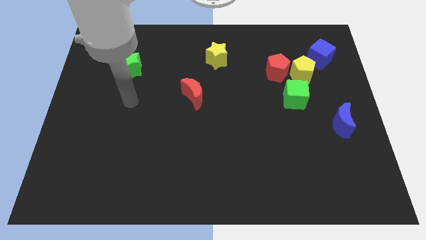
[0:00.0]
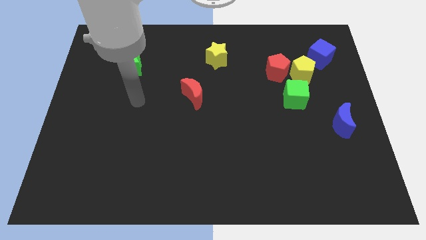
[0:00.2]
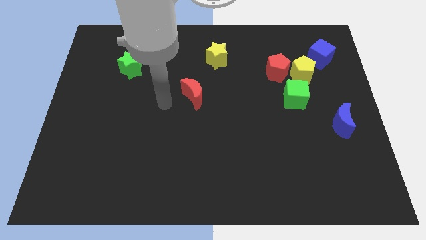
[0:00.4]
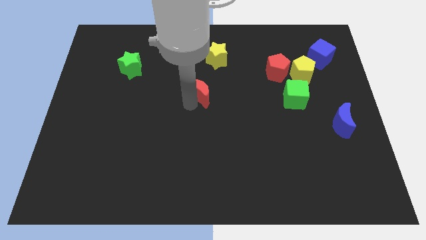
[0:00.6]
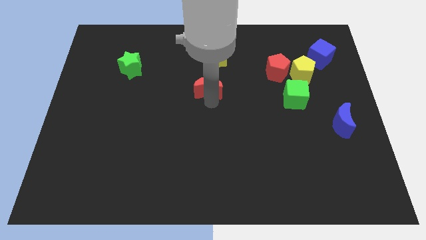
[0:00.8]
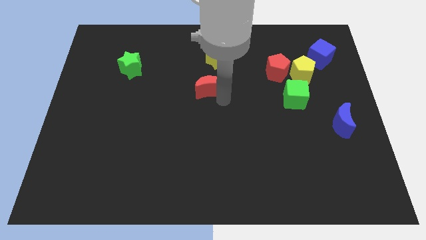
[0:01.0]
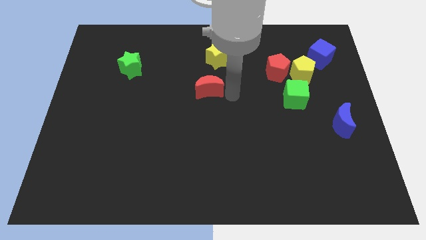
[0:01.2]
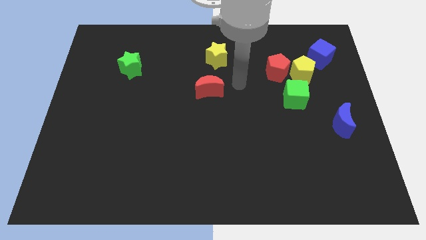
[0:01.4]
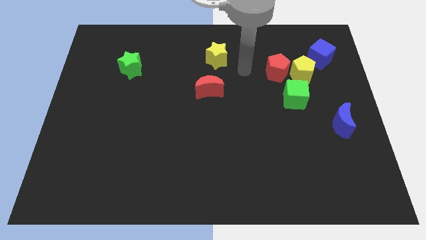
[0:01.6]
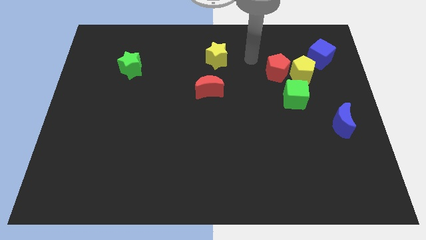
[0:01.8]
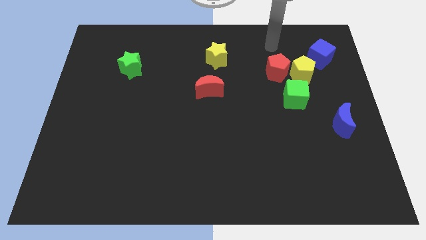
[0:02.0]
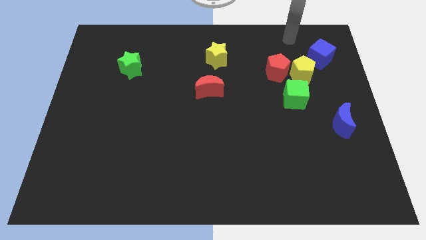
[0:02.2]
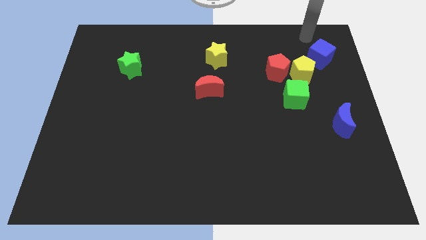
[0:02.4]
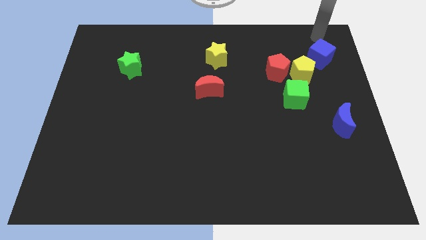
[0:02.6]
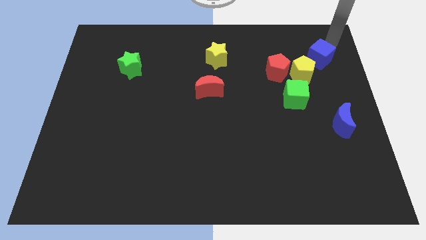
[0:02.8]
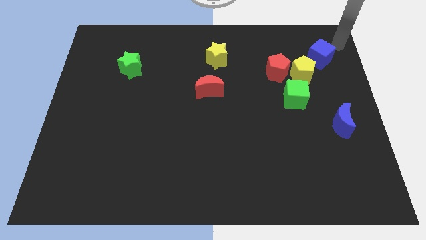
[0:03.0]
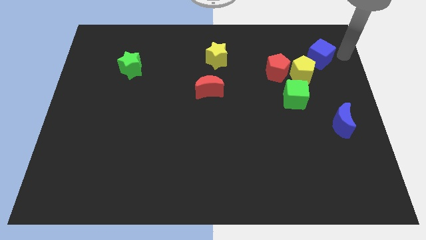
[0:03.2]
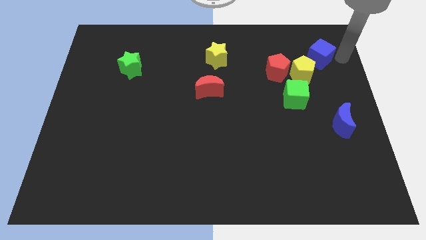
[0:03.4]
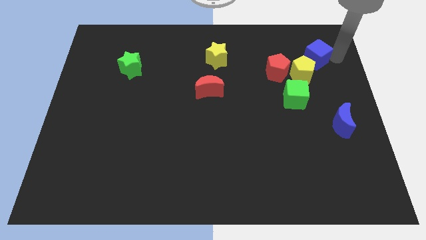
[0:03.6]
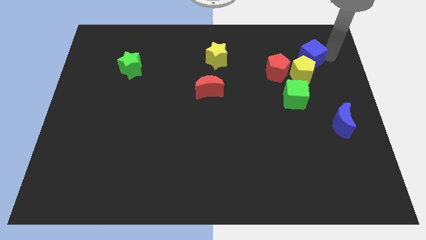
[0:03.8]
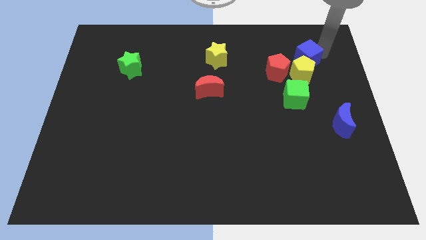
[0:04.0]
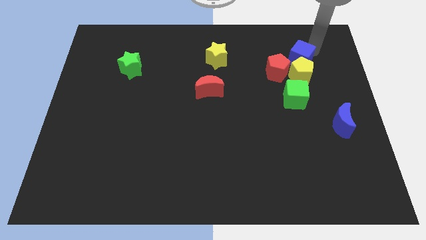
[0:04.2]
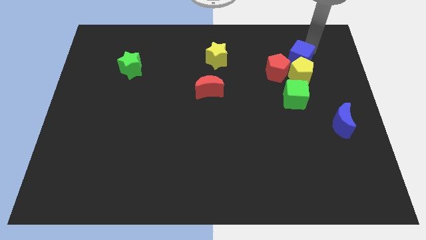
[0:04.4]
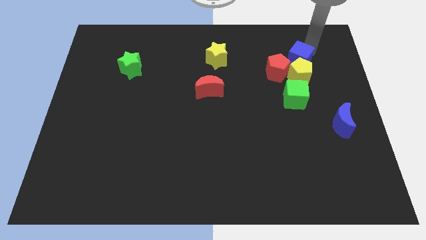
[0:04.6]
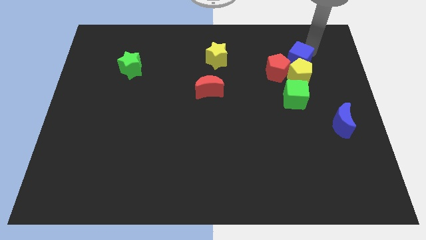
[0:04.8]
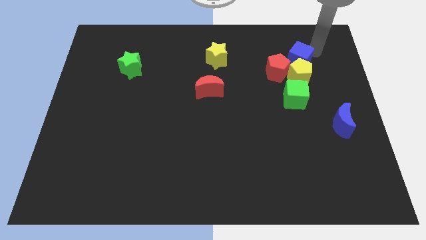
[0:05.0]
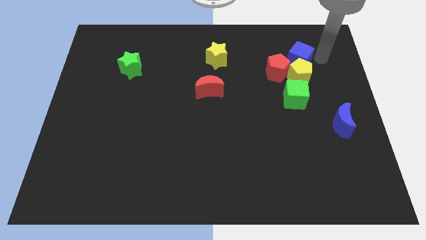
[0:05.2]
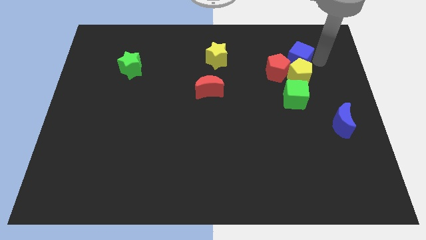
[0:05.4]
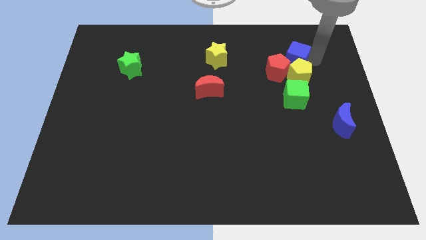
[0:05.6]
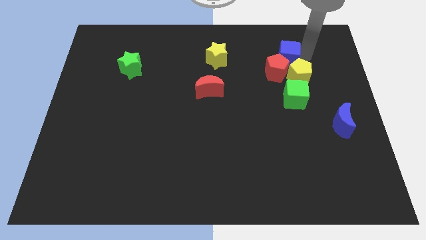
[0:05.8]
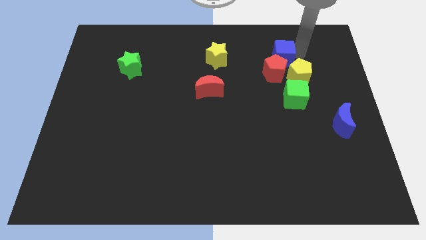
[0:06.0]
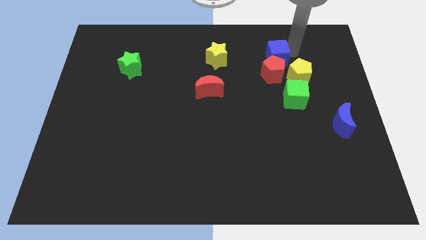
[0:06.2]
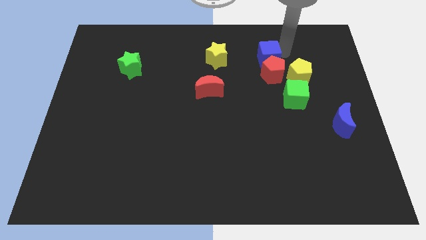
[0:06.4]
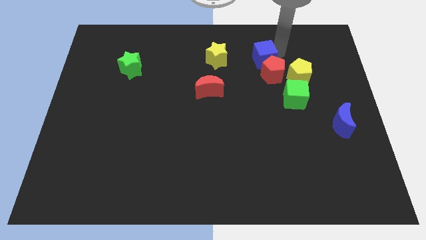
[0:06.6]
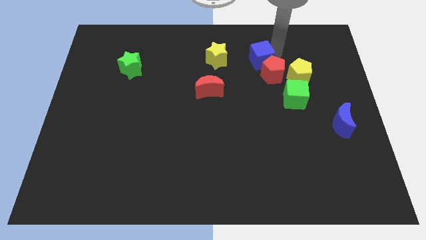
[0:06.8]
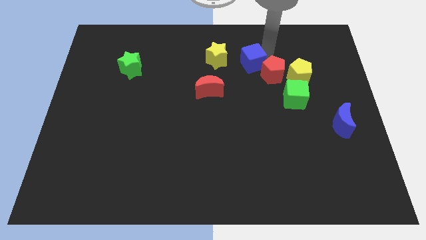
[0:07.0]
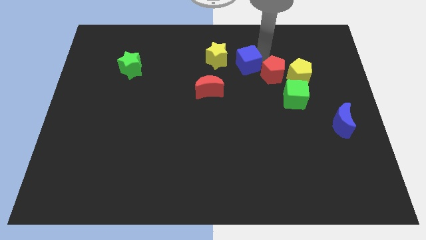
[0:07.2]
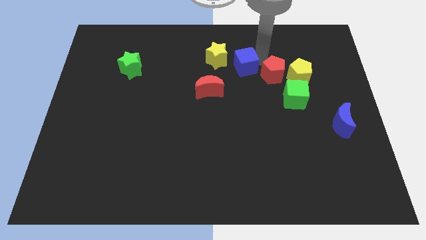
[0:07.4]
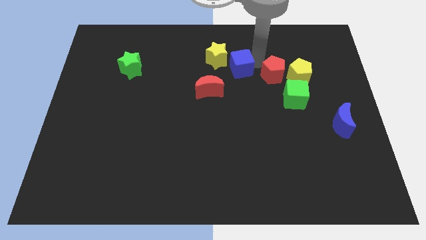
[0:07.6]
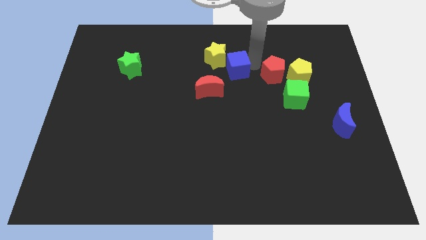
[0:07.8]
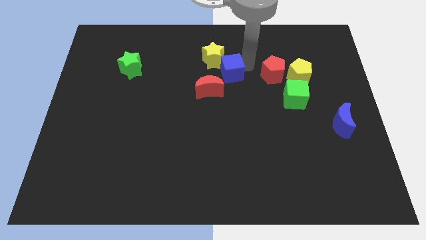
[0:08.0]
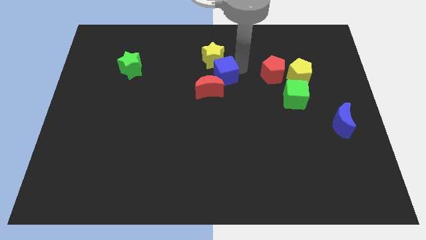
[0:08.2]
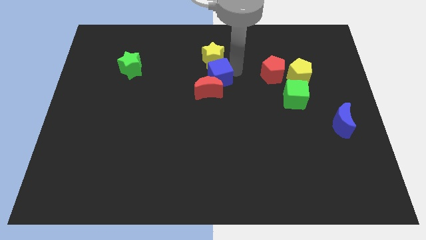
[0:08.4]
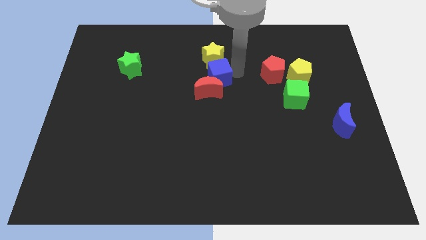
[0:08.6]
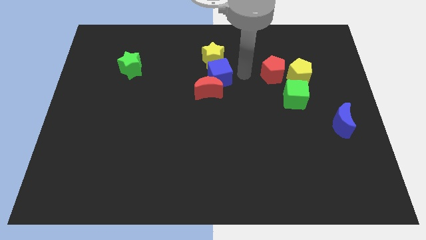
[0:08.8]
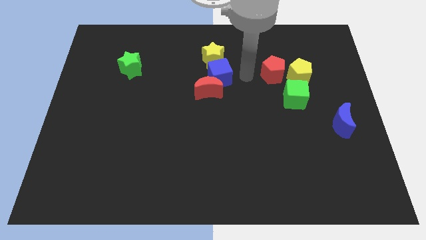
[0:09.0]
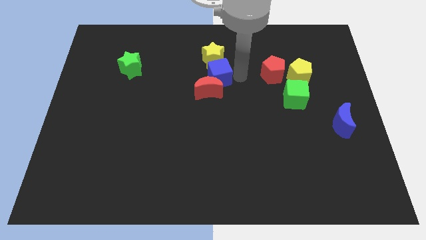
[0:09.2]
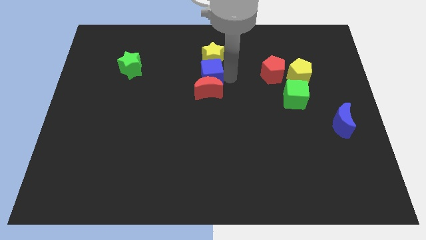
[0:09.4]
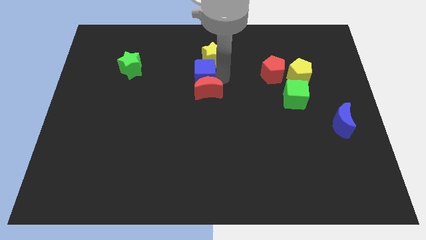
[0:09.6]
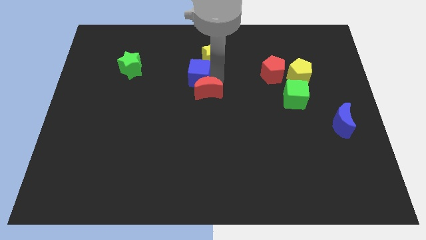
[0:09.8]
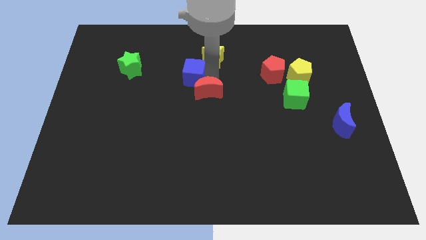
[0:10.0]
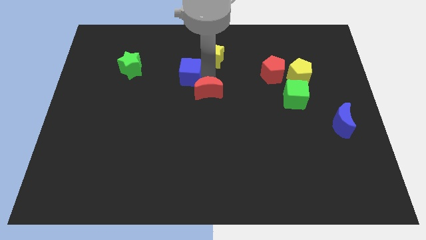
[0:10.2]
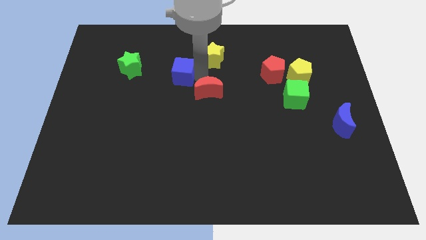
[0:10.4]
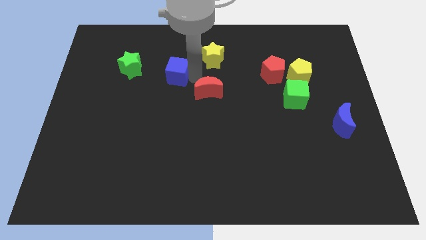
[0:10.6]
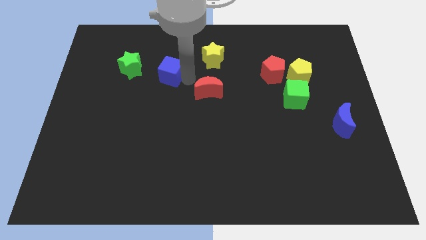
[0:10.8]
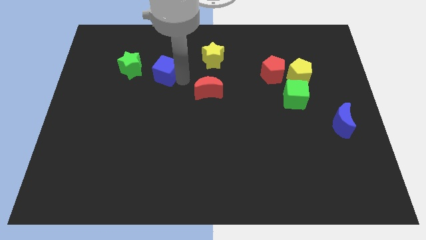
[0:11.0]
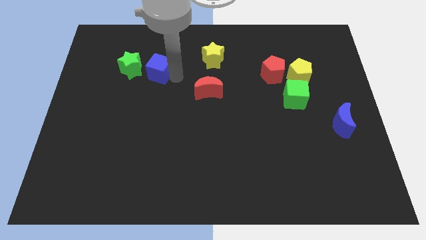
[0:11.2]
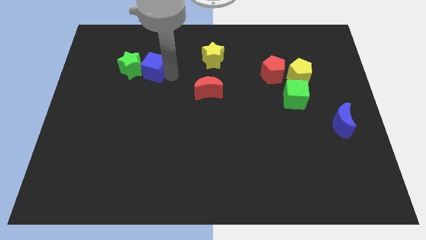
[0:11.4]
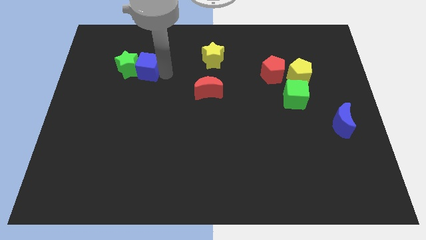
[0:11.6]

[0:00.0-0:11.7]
slide the blue cube towards the green star

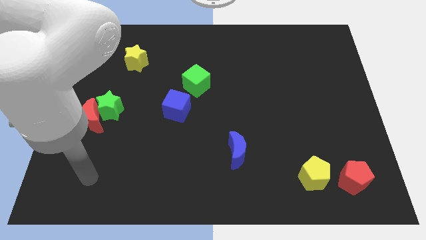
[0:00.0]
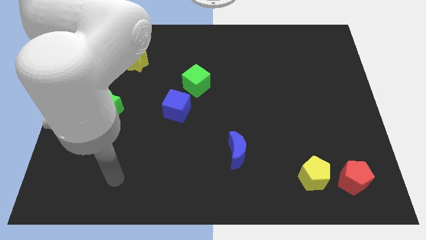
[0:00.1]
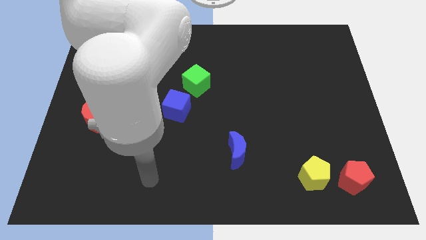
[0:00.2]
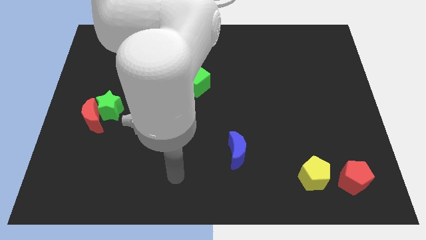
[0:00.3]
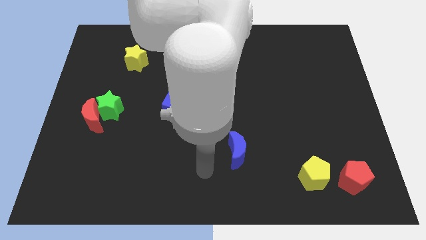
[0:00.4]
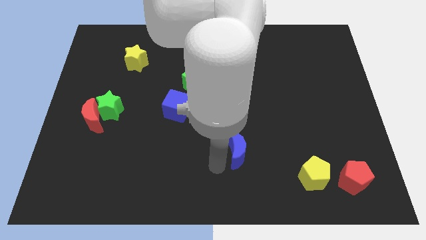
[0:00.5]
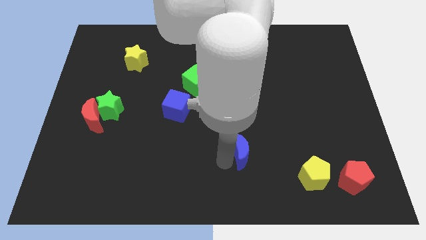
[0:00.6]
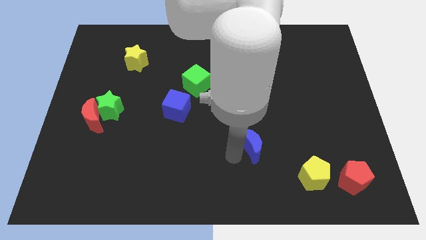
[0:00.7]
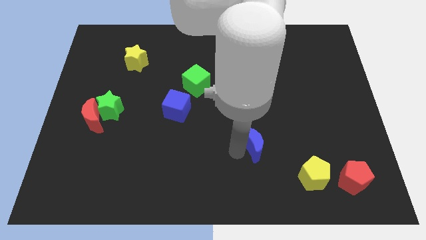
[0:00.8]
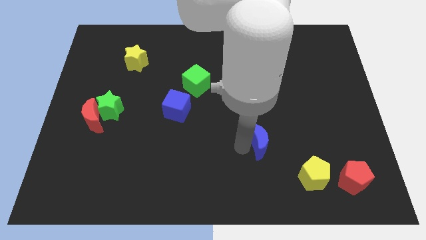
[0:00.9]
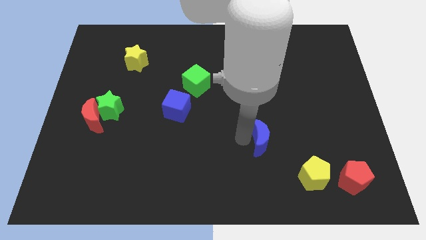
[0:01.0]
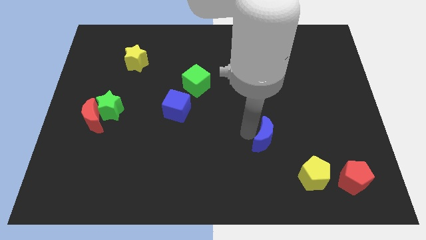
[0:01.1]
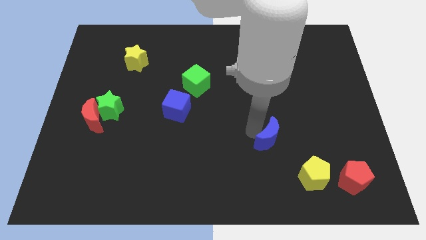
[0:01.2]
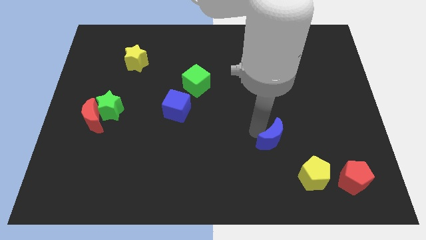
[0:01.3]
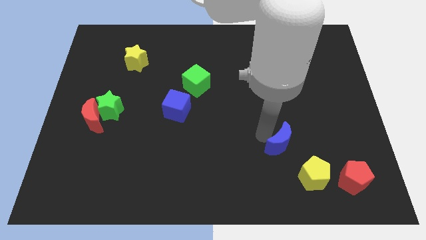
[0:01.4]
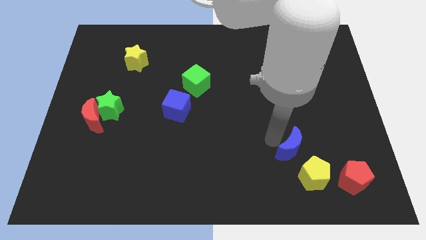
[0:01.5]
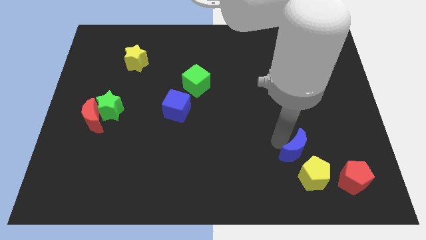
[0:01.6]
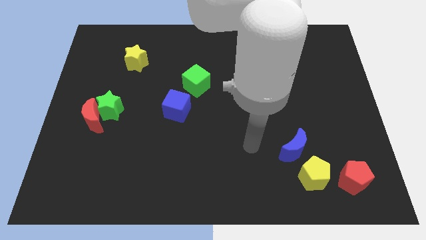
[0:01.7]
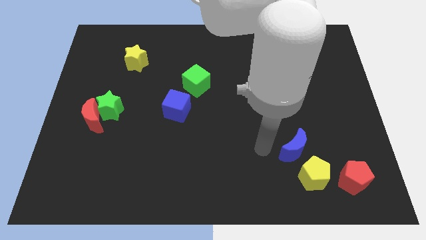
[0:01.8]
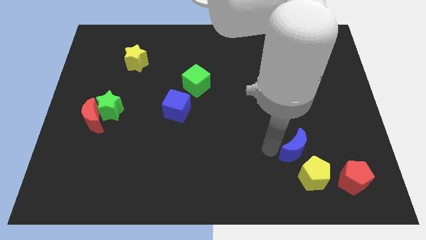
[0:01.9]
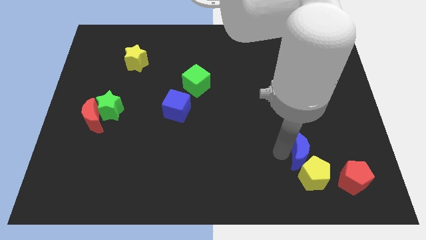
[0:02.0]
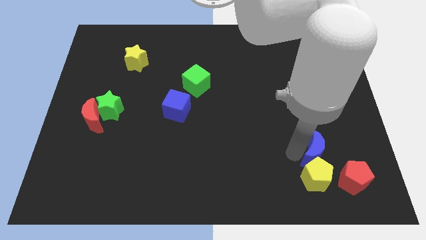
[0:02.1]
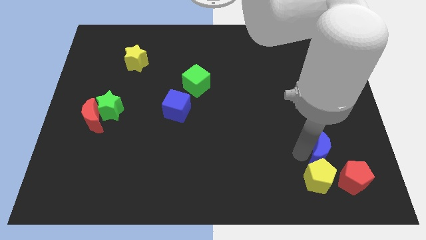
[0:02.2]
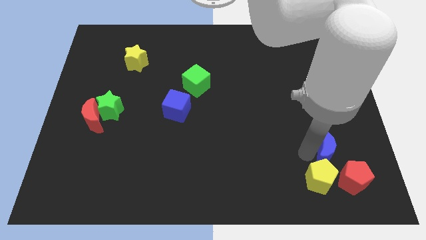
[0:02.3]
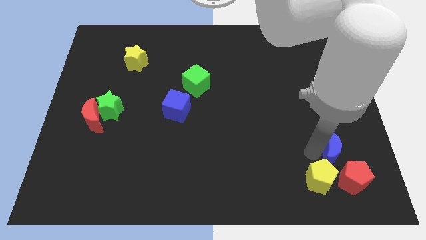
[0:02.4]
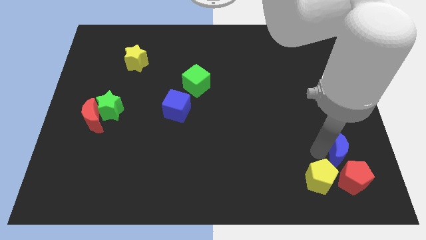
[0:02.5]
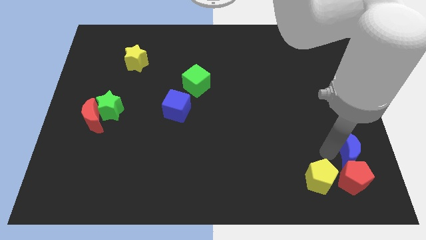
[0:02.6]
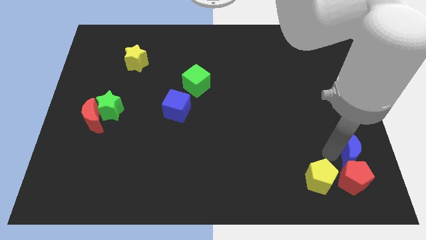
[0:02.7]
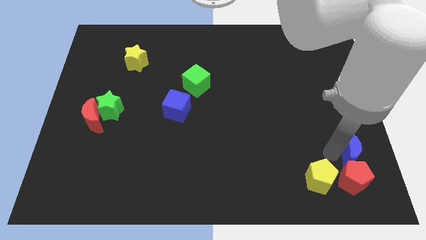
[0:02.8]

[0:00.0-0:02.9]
move the blue moon next to the red pentagon
